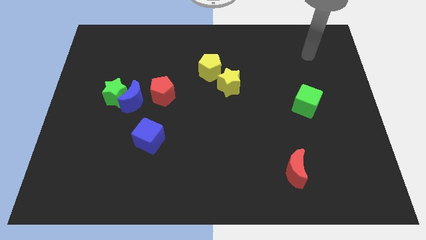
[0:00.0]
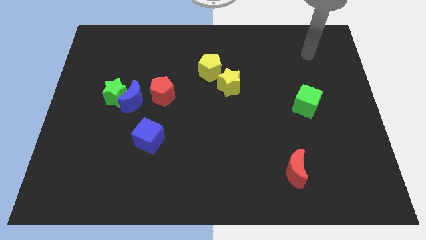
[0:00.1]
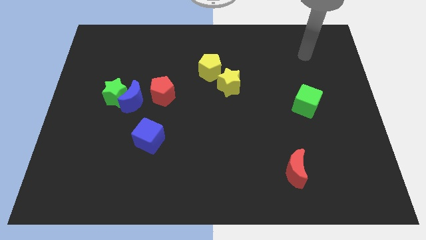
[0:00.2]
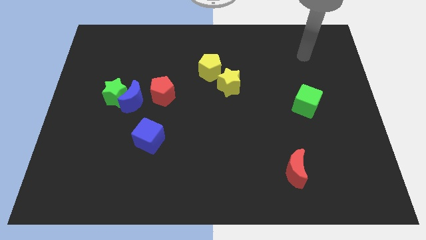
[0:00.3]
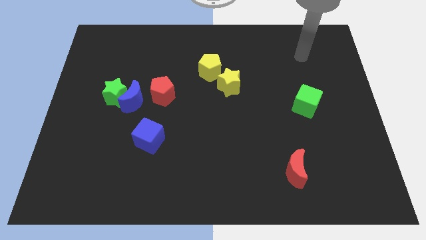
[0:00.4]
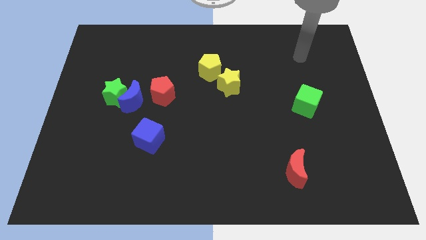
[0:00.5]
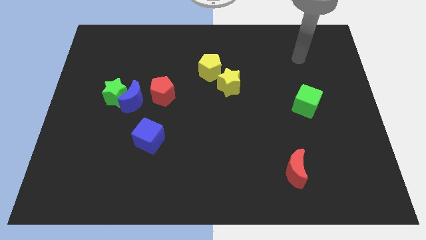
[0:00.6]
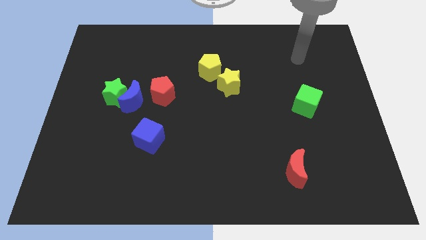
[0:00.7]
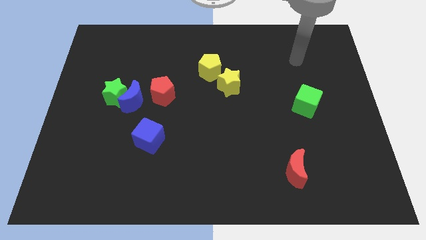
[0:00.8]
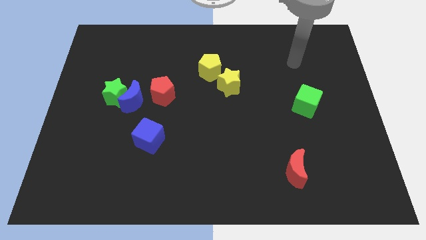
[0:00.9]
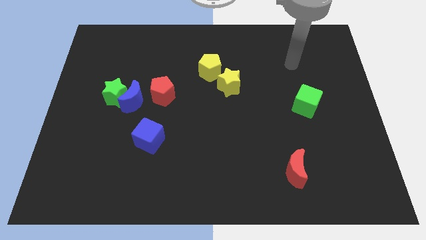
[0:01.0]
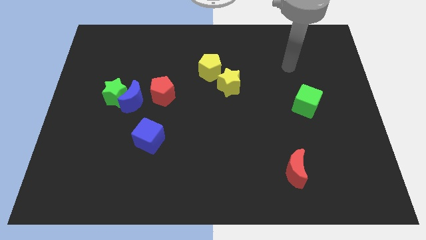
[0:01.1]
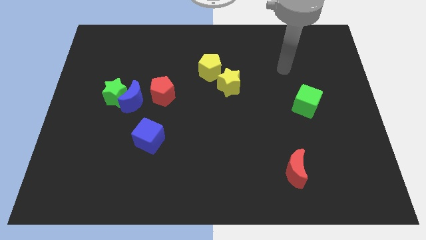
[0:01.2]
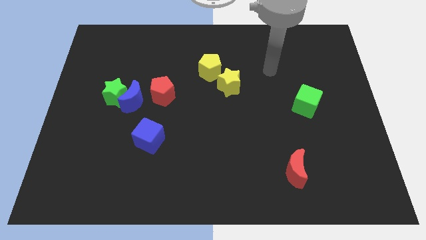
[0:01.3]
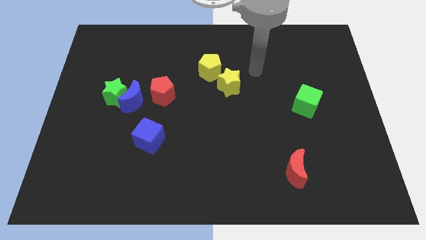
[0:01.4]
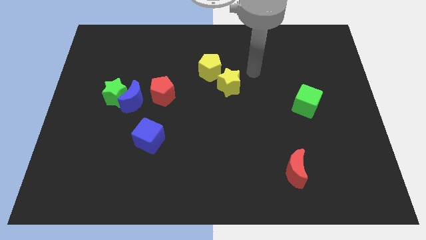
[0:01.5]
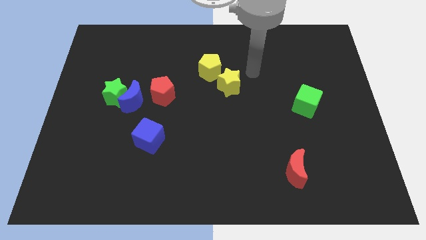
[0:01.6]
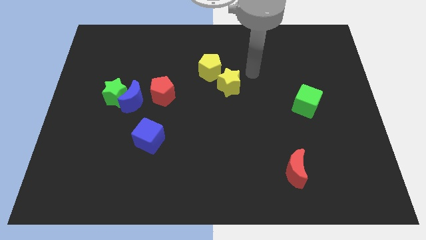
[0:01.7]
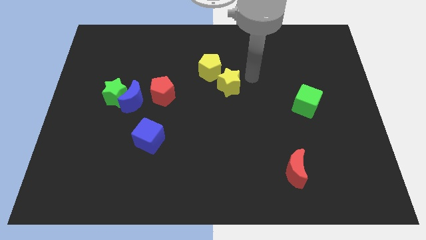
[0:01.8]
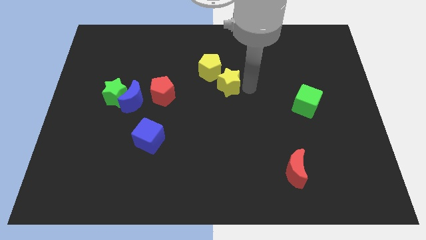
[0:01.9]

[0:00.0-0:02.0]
point your arm to the right side of the yellow star

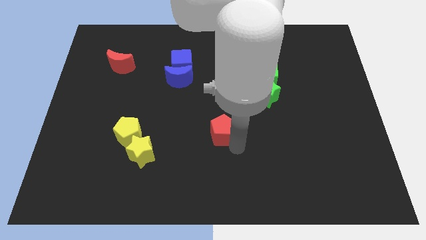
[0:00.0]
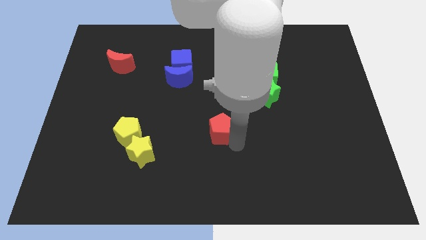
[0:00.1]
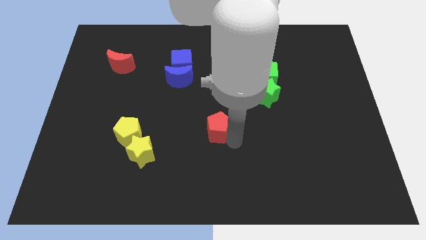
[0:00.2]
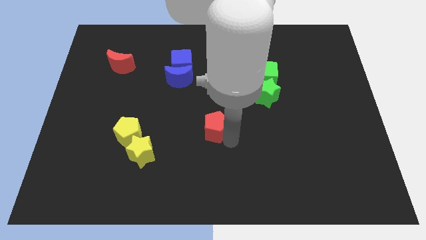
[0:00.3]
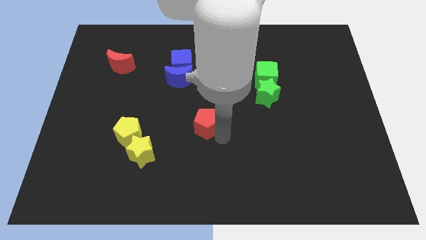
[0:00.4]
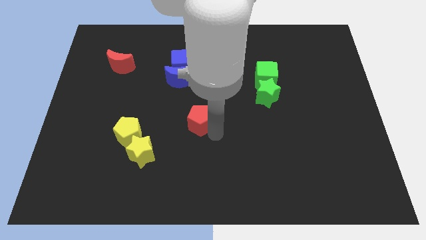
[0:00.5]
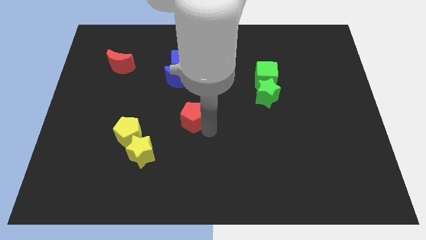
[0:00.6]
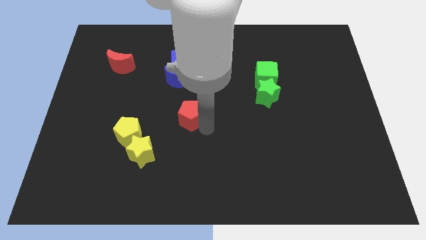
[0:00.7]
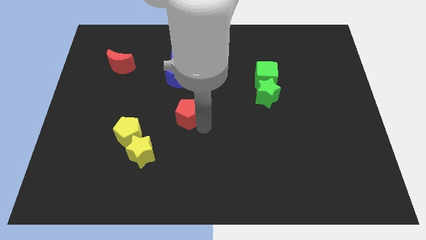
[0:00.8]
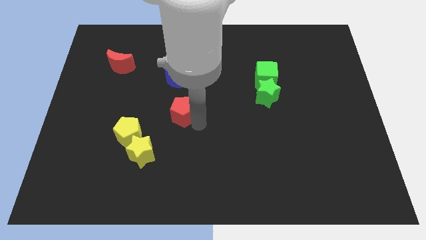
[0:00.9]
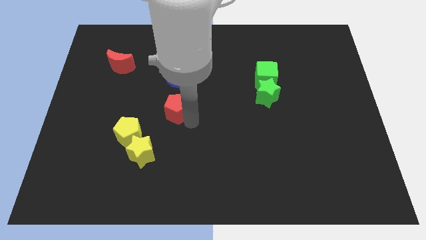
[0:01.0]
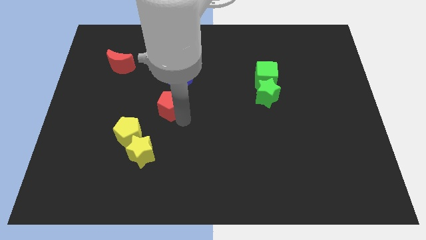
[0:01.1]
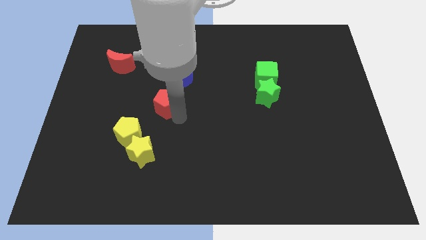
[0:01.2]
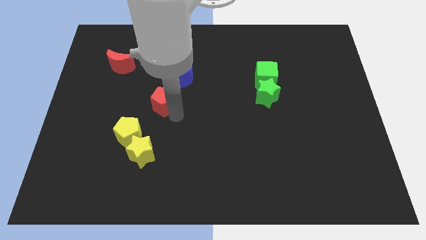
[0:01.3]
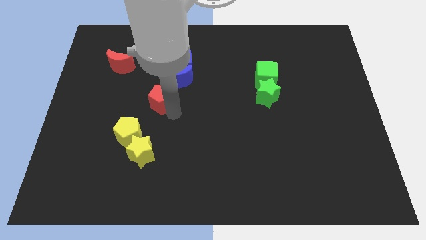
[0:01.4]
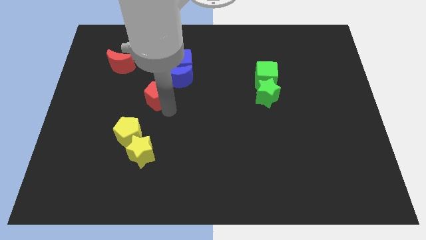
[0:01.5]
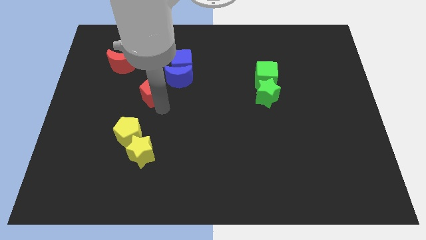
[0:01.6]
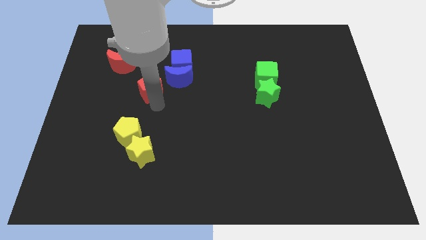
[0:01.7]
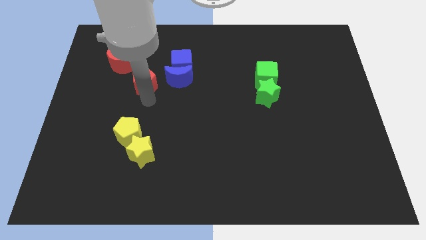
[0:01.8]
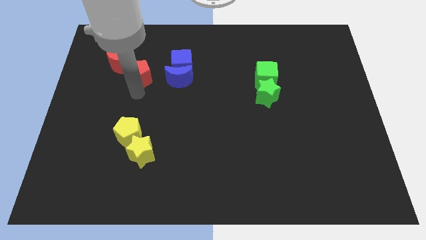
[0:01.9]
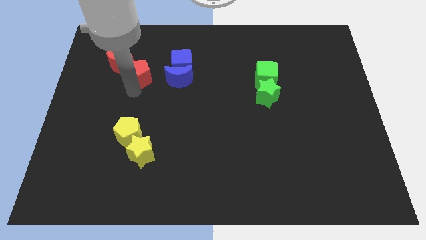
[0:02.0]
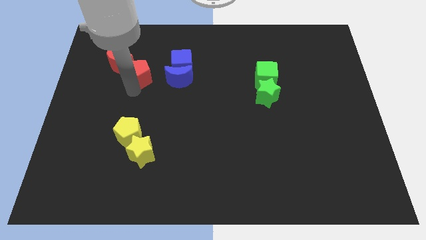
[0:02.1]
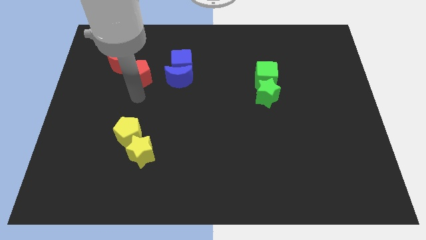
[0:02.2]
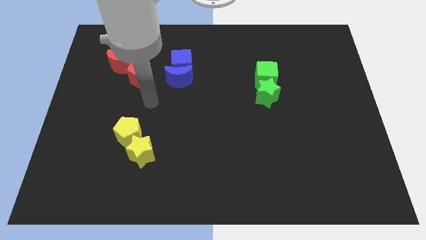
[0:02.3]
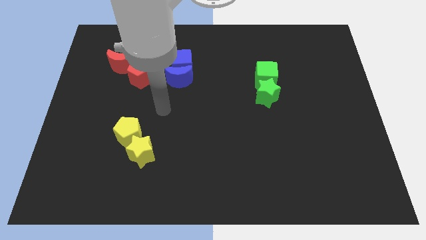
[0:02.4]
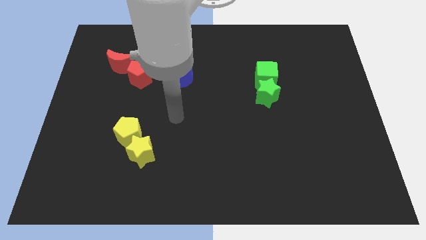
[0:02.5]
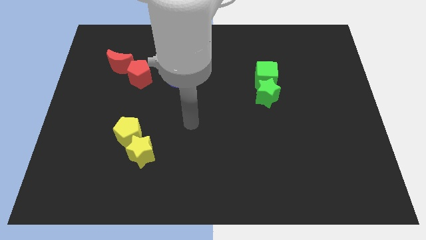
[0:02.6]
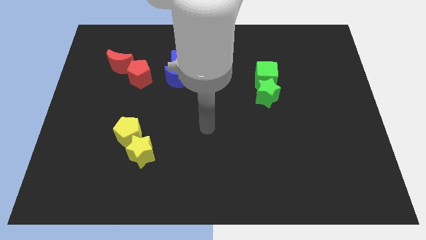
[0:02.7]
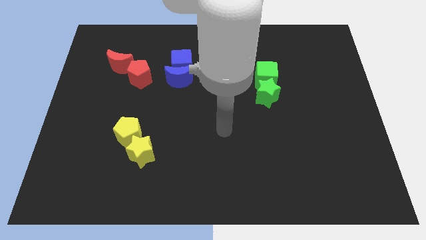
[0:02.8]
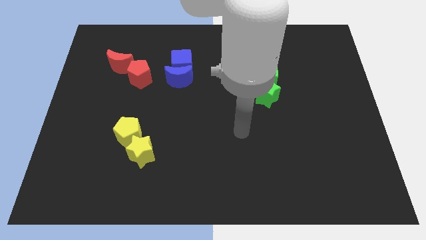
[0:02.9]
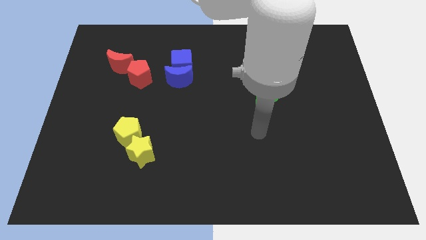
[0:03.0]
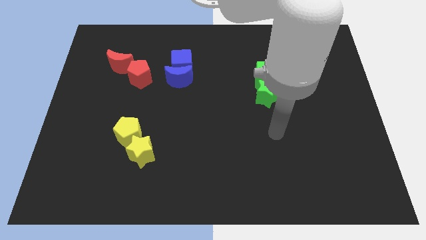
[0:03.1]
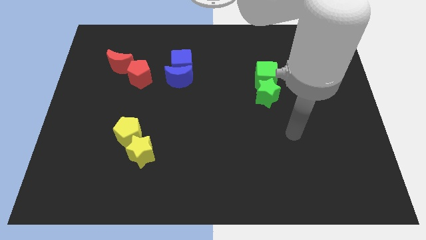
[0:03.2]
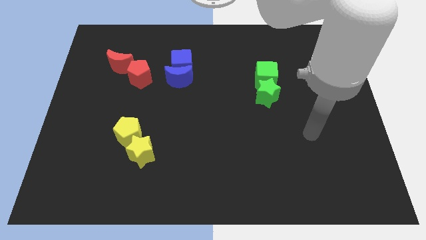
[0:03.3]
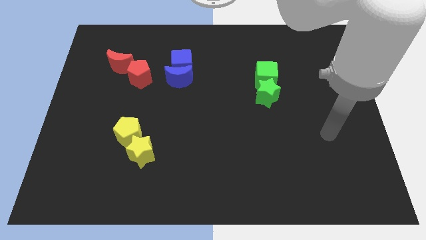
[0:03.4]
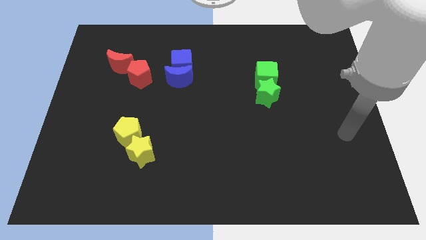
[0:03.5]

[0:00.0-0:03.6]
push the red pentagon towards the red moon

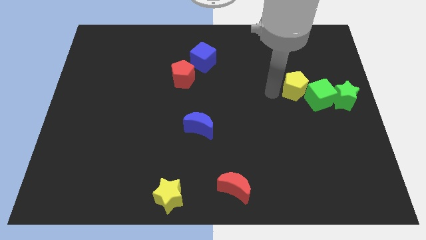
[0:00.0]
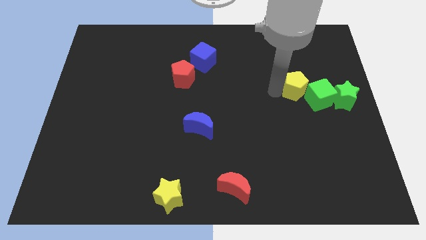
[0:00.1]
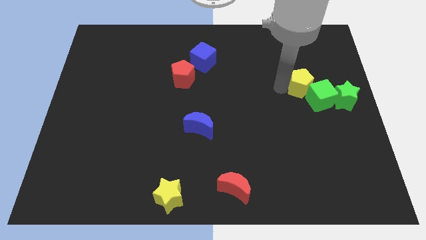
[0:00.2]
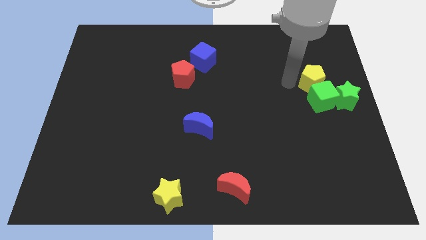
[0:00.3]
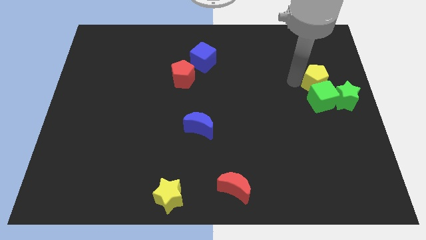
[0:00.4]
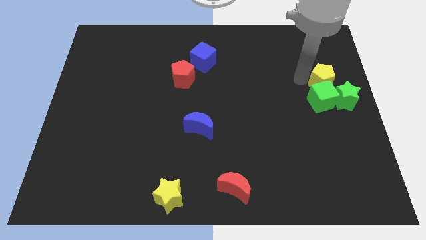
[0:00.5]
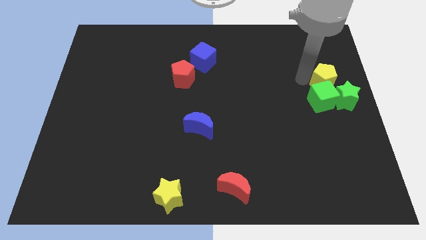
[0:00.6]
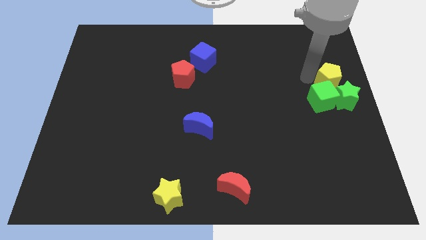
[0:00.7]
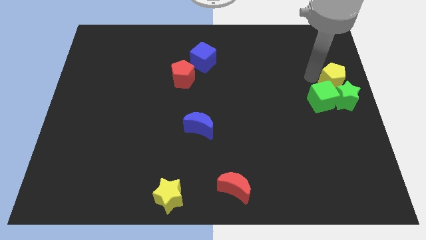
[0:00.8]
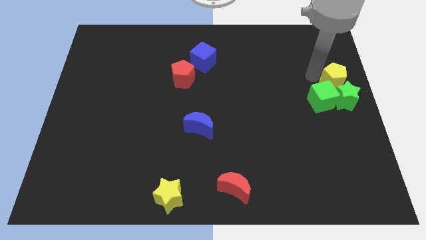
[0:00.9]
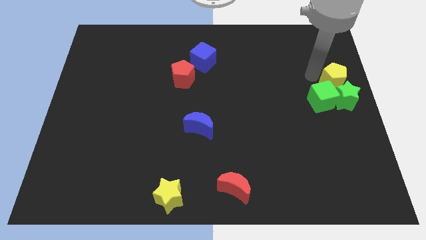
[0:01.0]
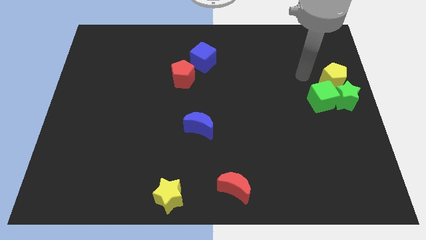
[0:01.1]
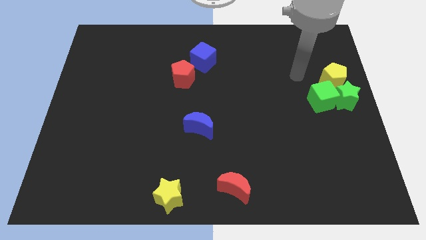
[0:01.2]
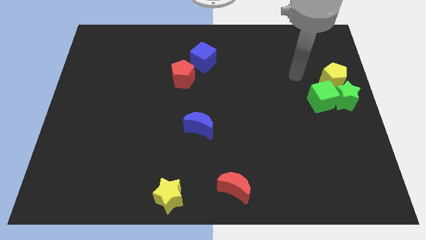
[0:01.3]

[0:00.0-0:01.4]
place the yellow pentagon above the green star

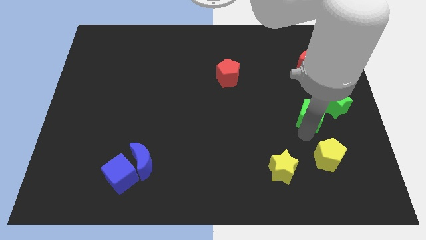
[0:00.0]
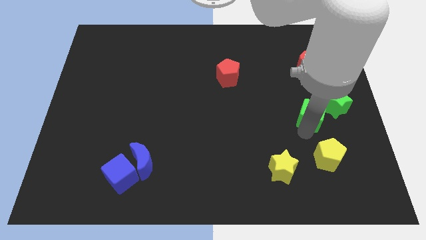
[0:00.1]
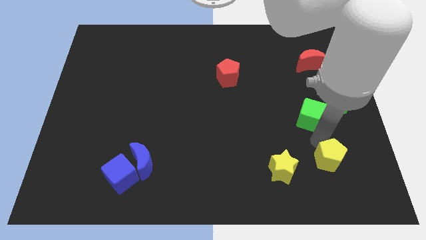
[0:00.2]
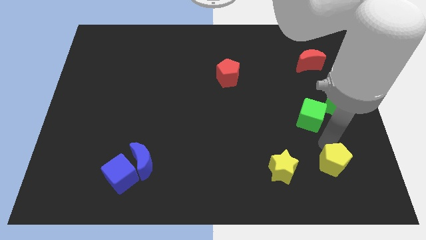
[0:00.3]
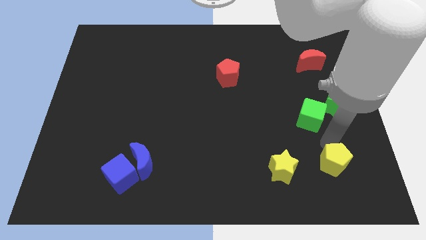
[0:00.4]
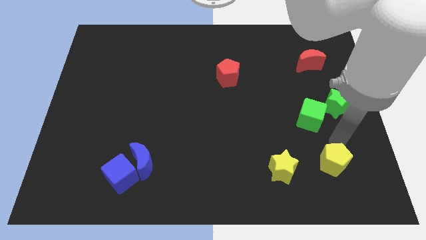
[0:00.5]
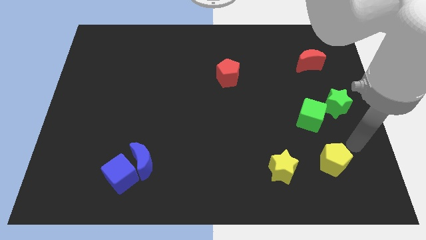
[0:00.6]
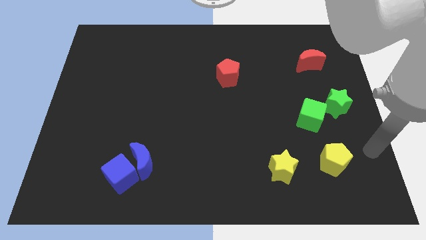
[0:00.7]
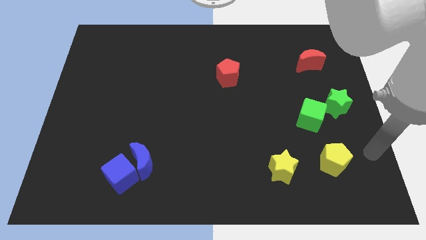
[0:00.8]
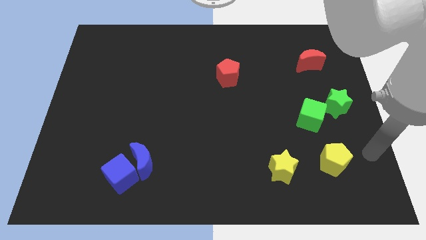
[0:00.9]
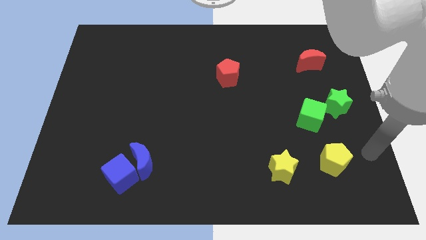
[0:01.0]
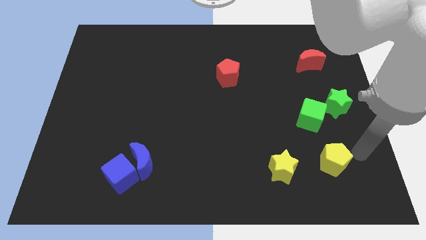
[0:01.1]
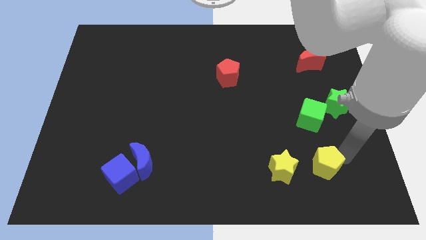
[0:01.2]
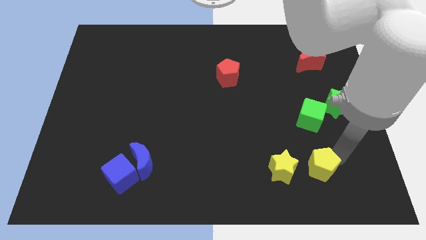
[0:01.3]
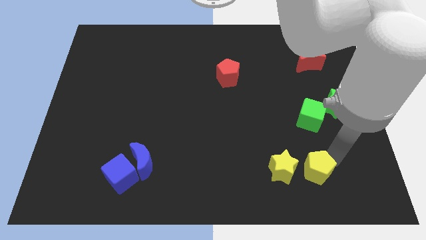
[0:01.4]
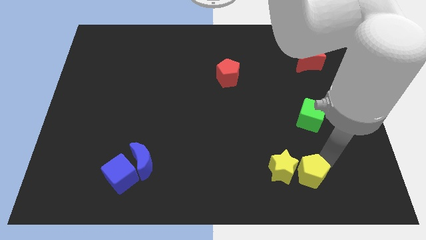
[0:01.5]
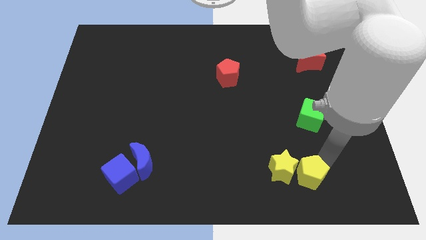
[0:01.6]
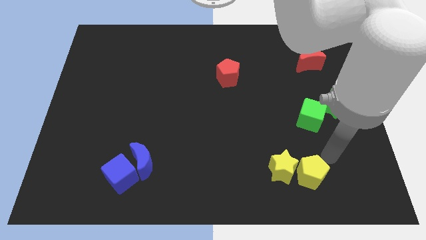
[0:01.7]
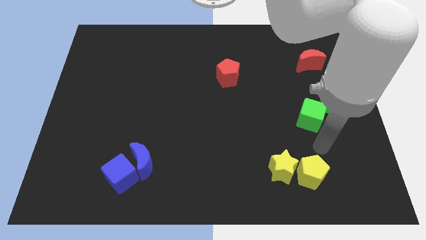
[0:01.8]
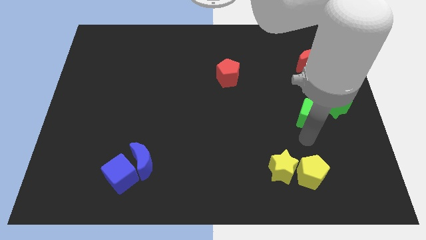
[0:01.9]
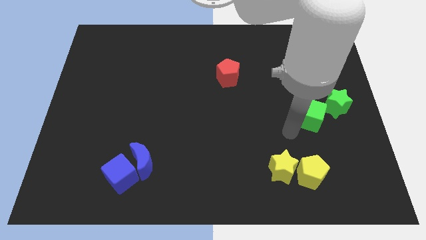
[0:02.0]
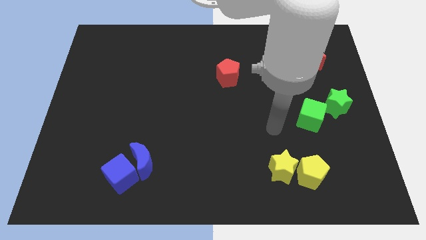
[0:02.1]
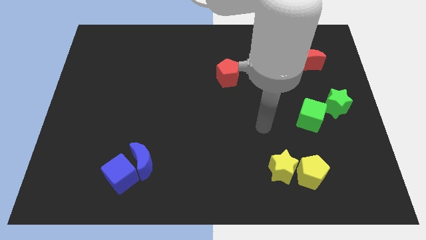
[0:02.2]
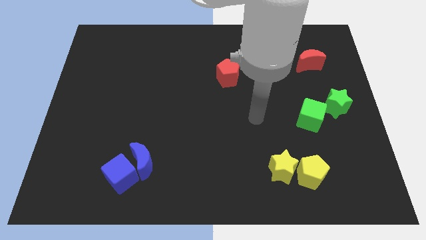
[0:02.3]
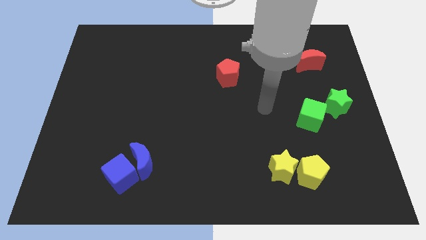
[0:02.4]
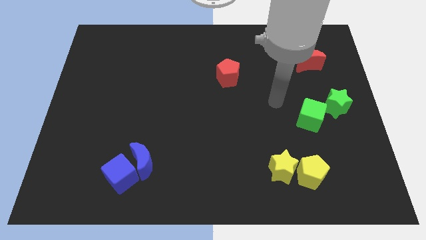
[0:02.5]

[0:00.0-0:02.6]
move the yellow pentagon to the right of the yellow star
